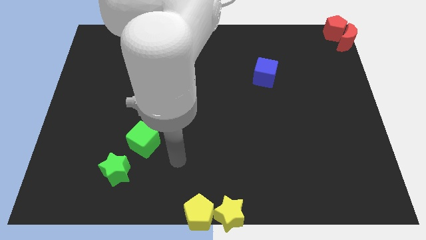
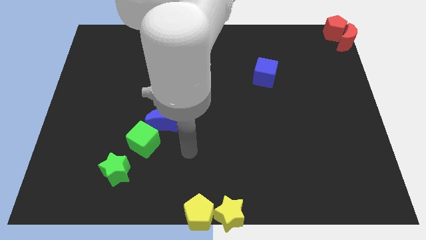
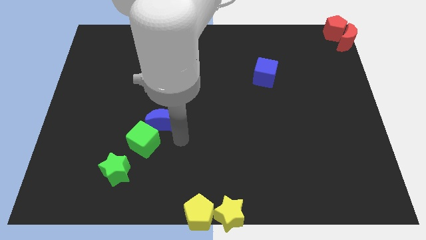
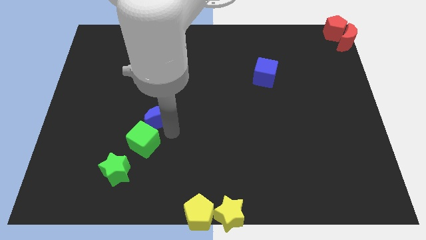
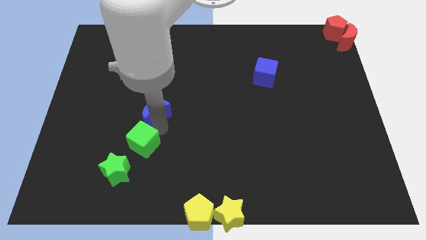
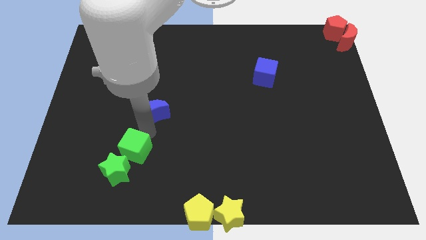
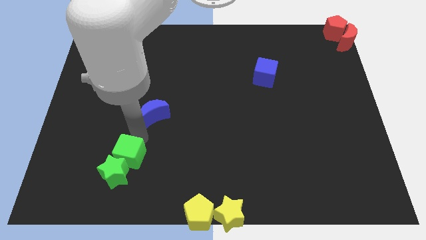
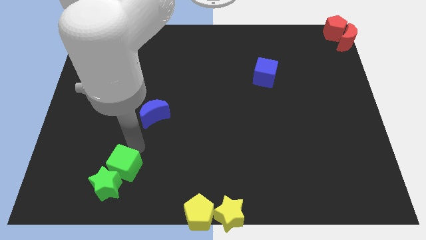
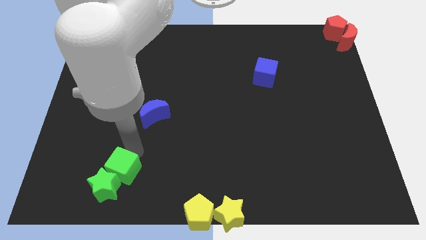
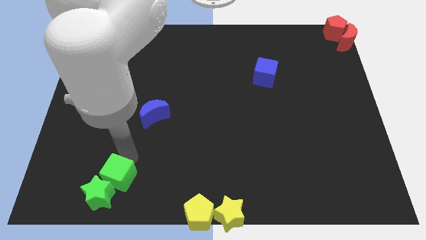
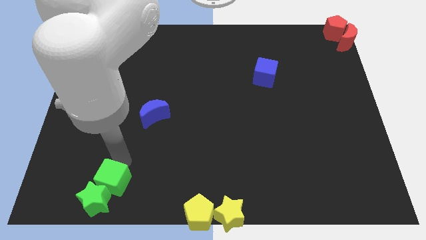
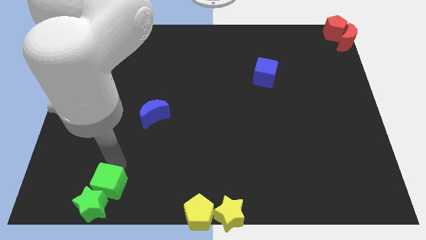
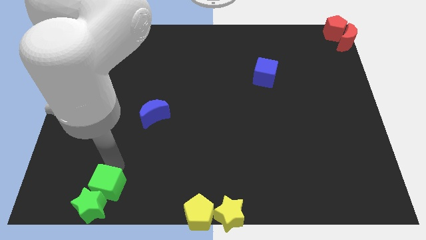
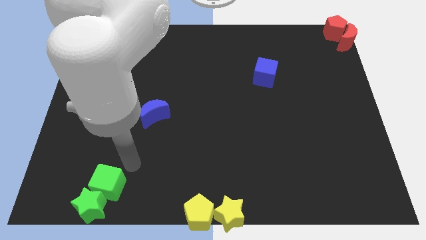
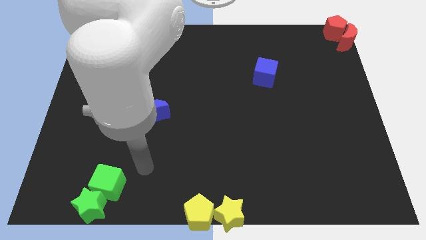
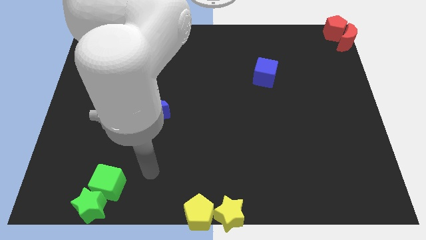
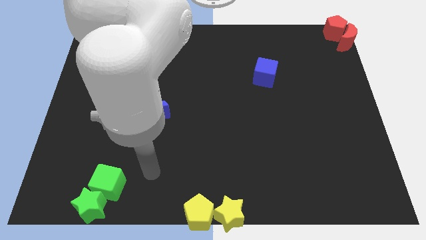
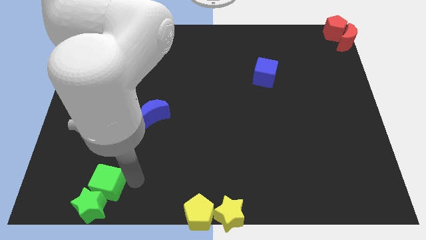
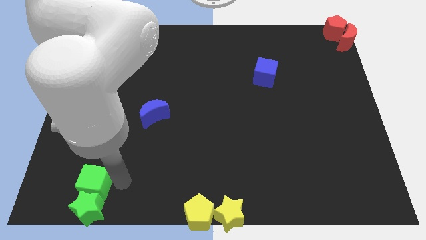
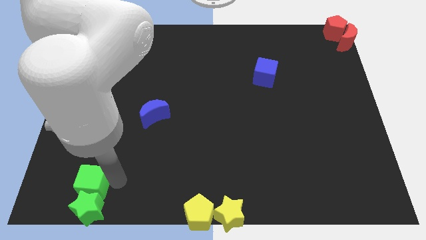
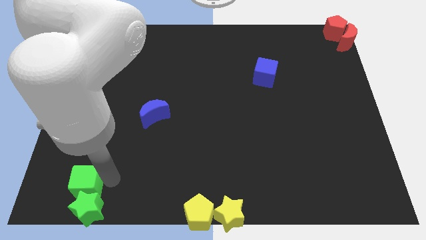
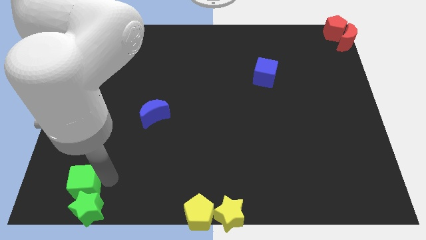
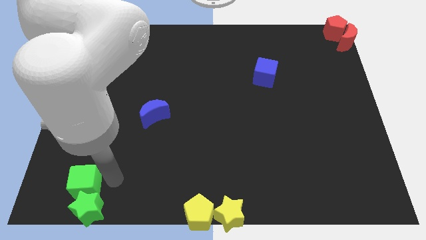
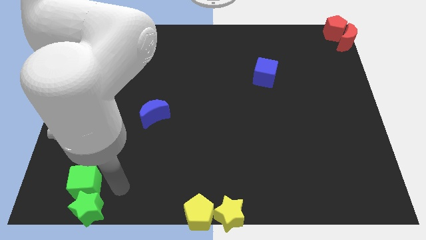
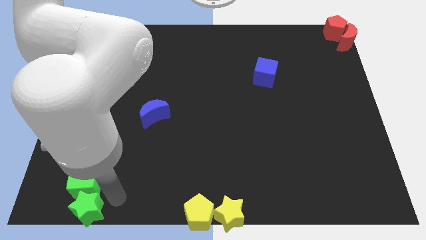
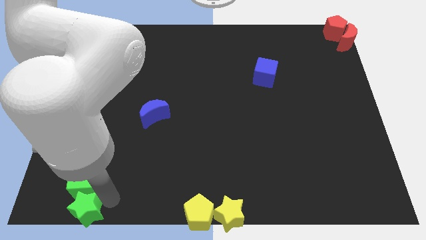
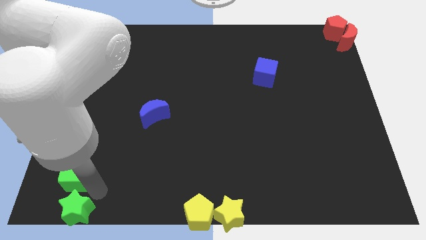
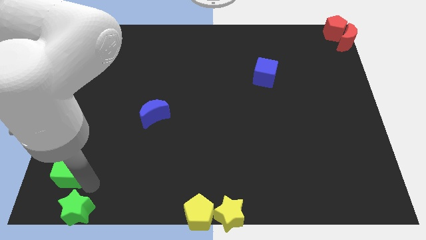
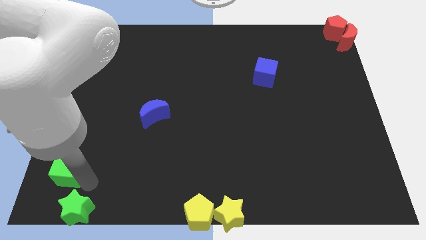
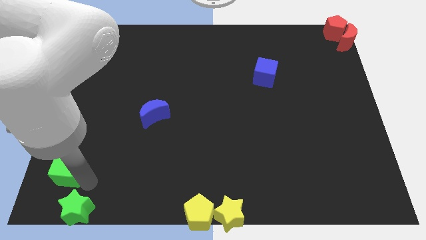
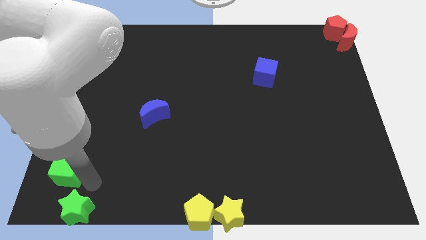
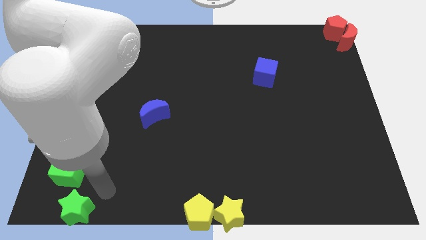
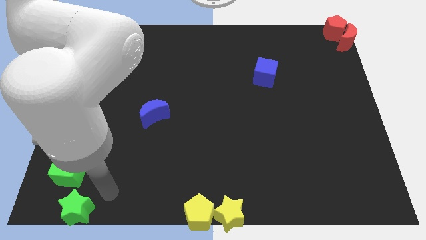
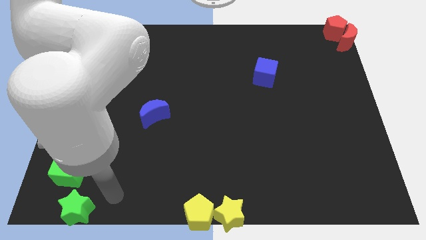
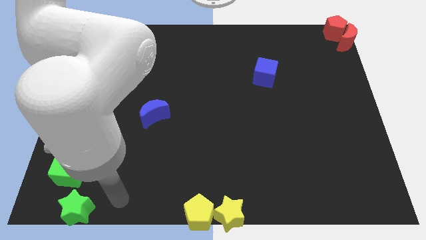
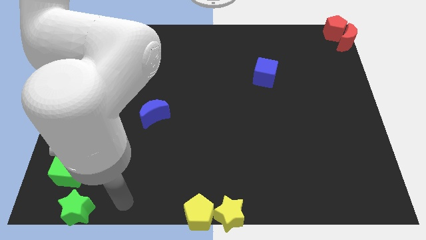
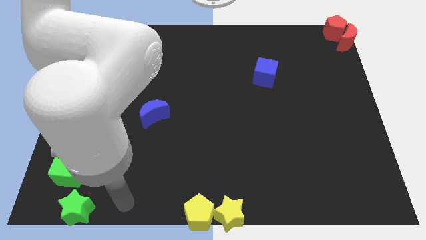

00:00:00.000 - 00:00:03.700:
slide the green blocks towards the bottom left

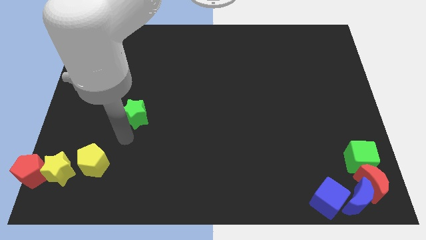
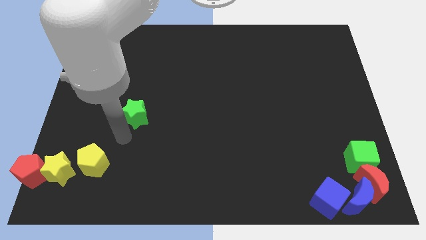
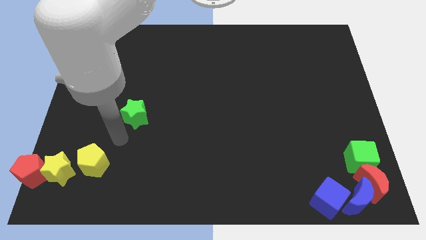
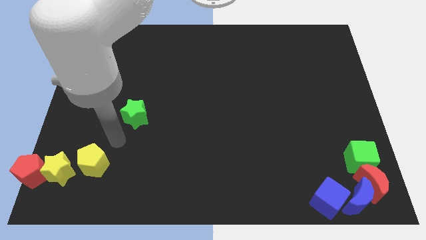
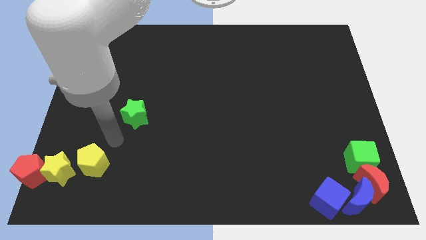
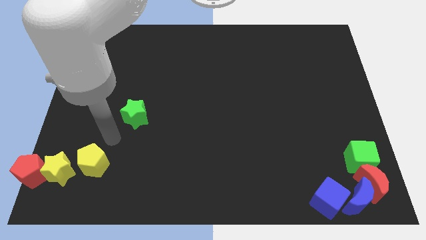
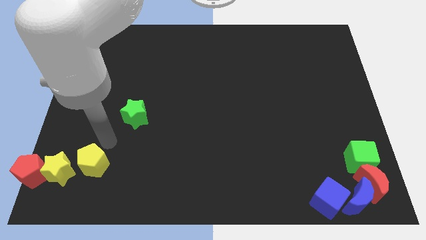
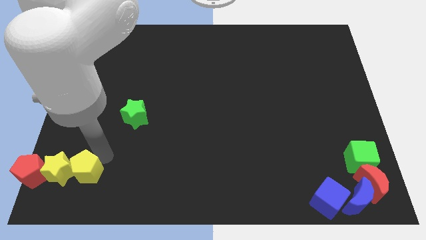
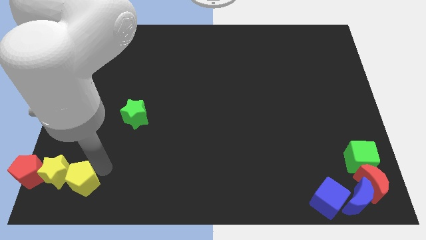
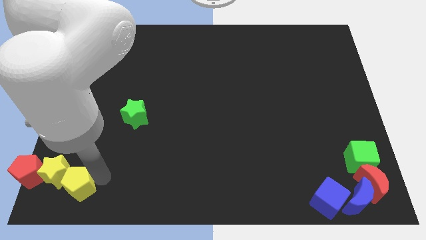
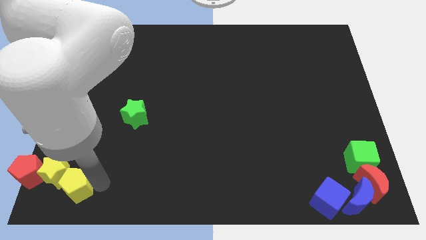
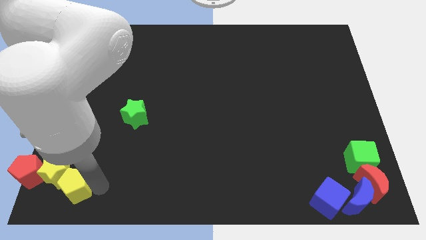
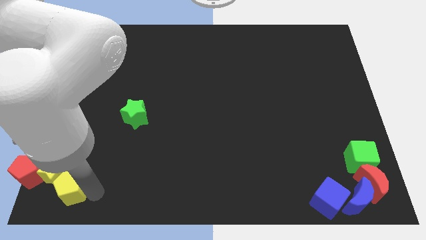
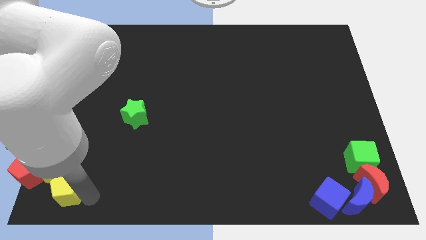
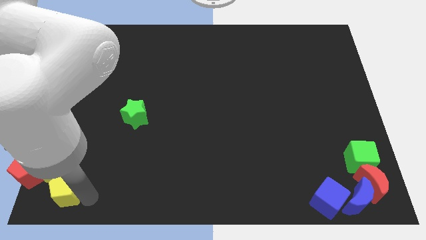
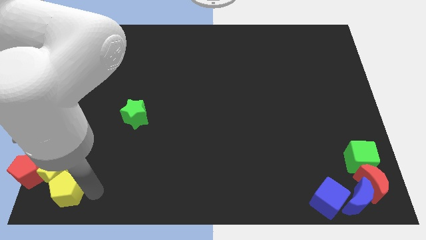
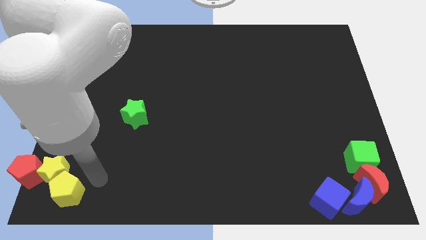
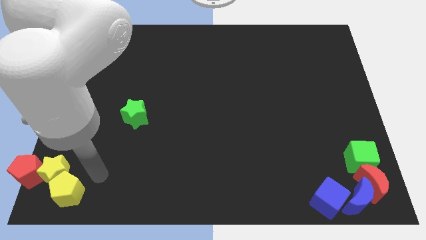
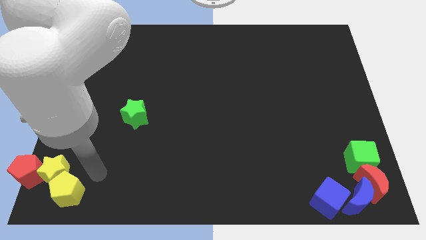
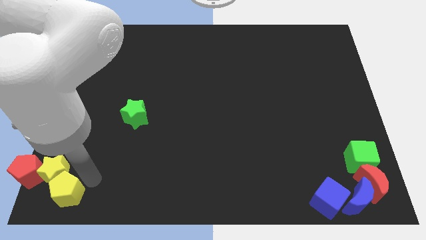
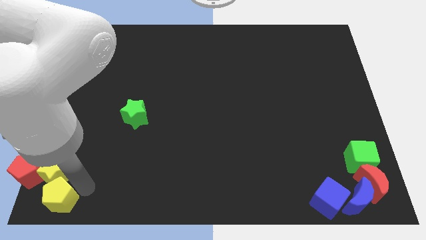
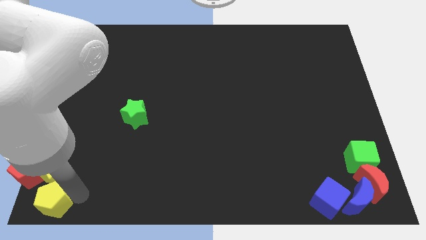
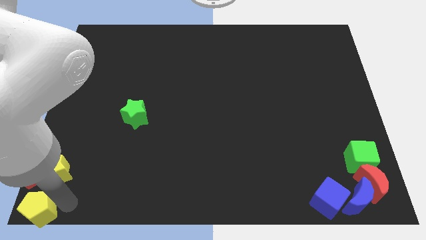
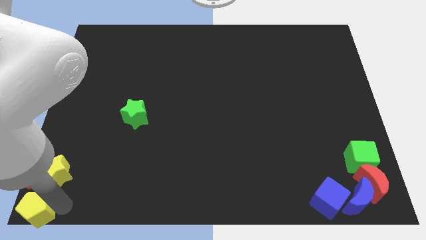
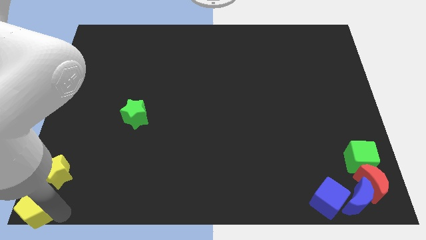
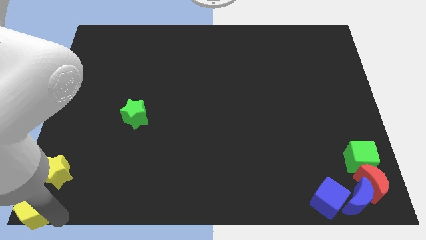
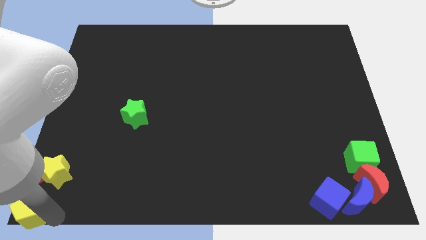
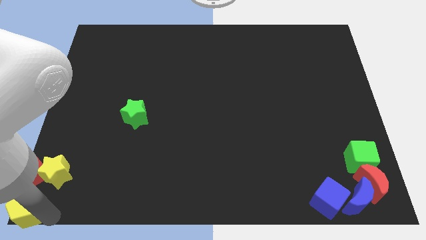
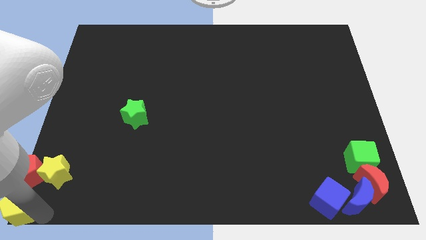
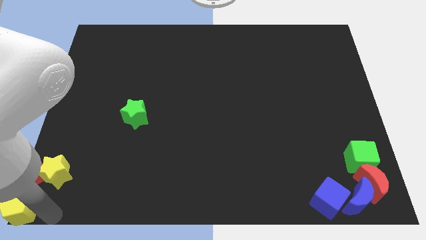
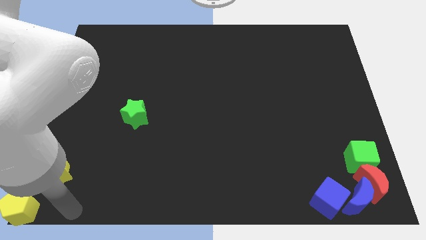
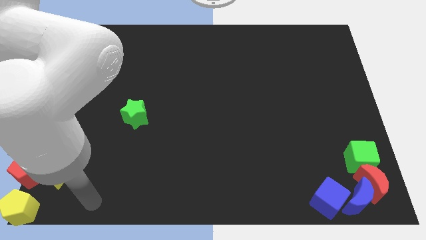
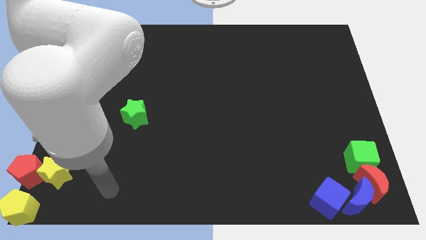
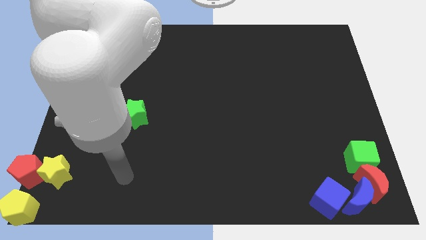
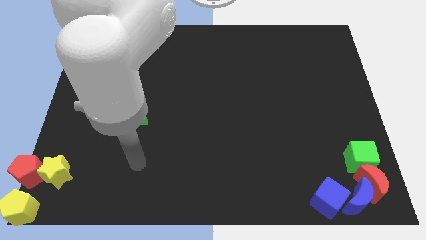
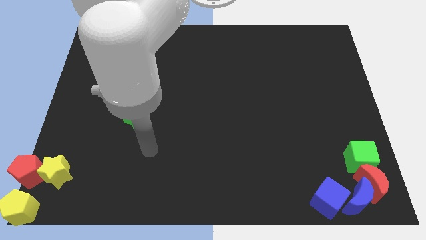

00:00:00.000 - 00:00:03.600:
move the yellow pentagon below the red pentagon

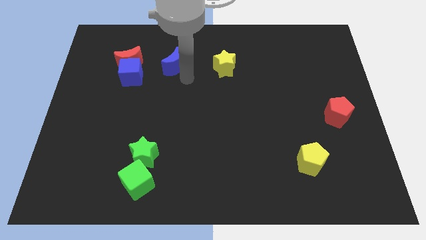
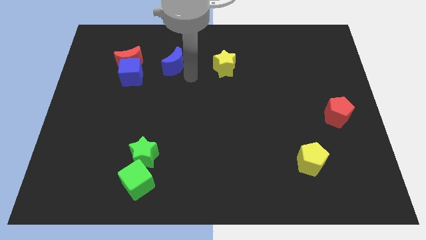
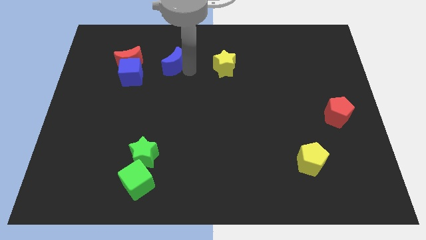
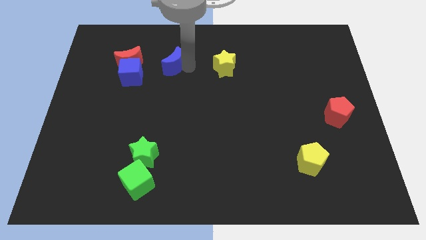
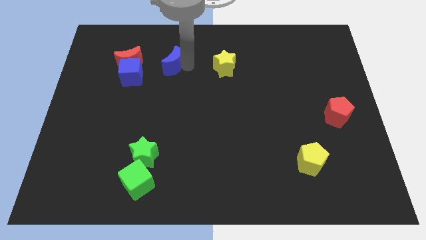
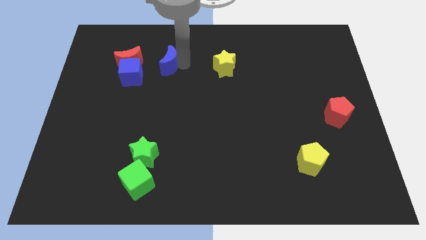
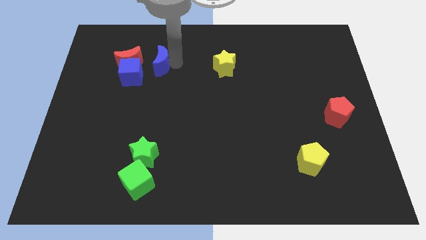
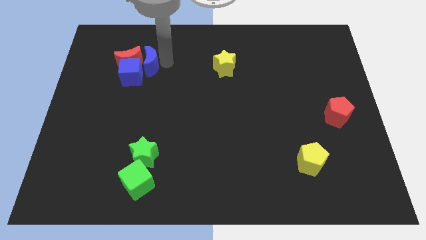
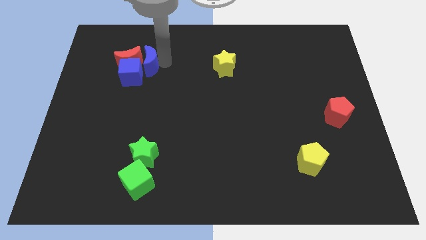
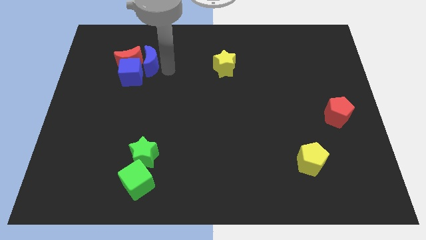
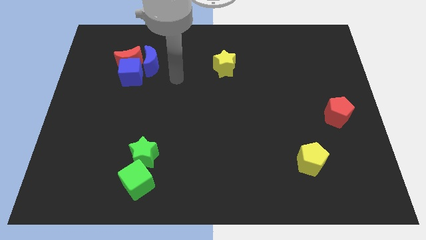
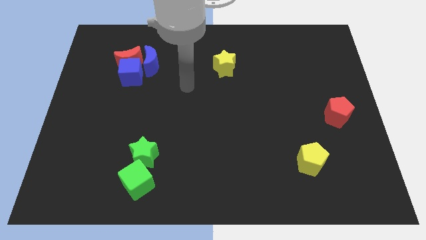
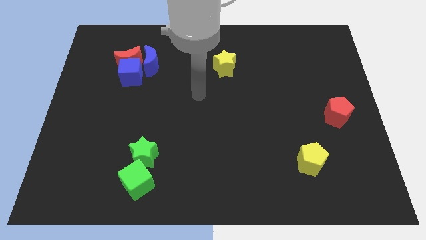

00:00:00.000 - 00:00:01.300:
place blue moon adjacent to the blue cube and red crescent

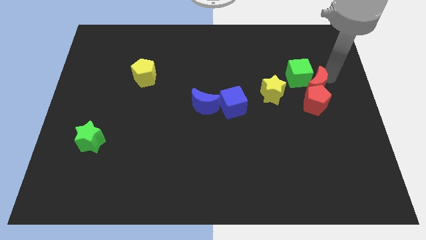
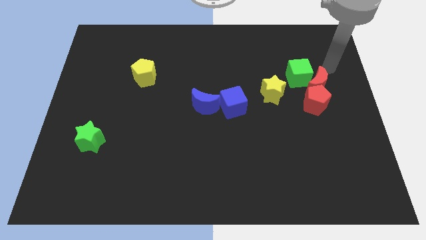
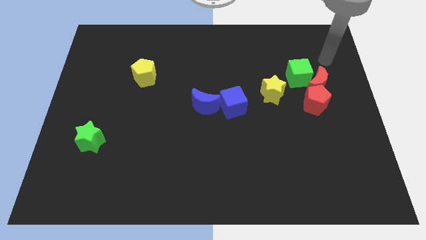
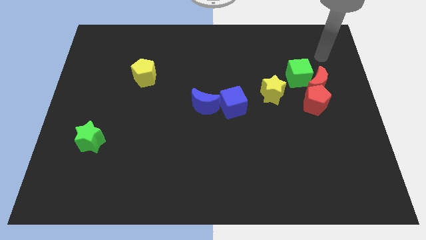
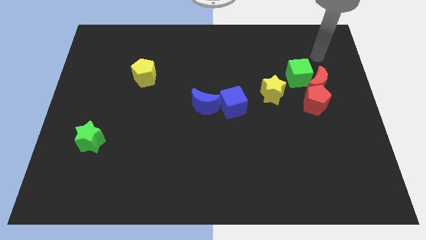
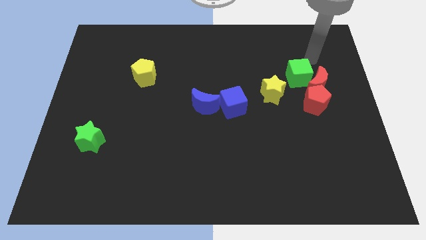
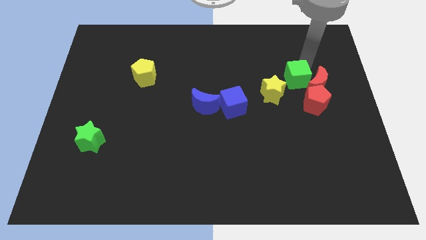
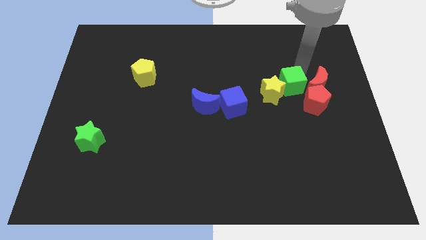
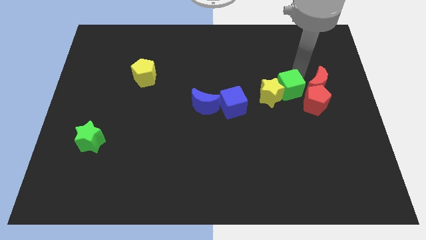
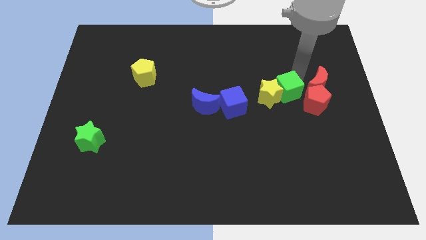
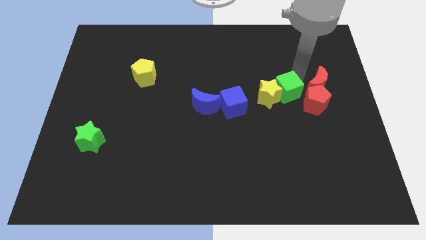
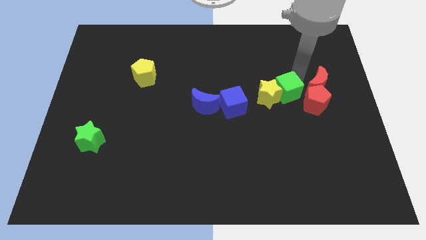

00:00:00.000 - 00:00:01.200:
slide green cube into yellow star
